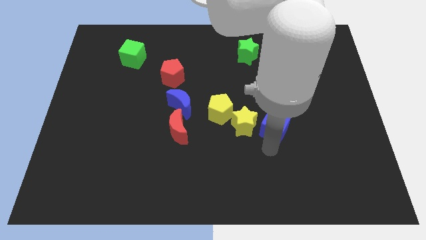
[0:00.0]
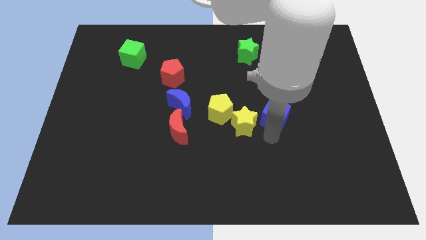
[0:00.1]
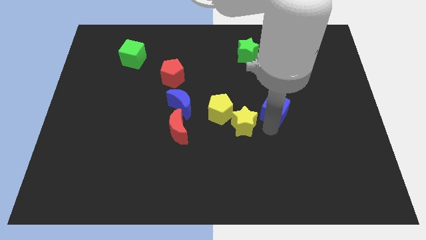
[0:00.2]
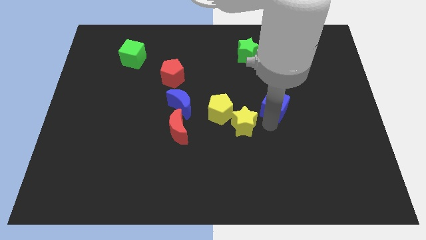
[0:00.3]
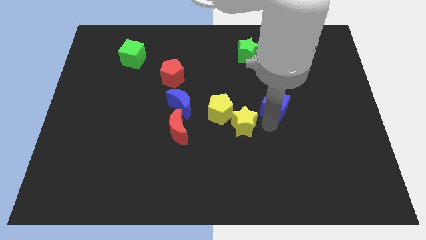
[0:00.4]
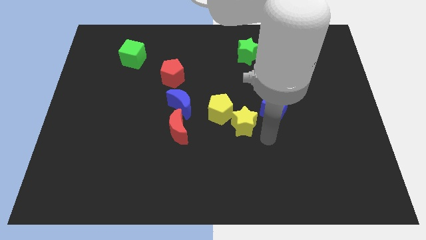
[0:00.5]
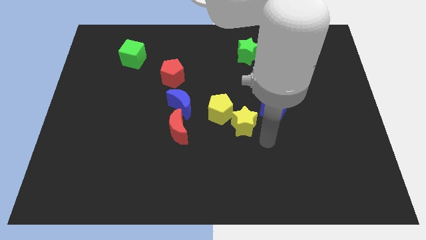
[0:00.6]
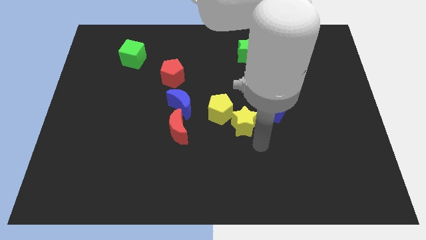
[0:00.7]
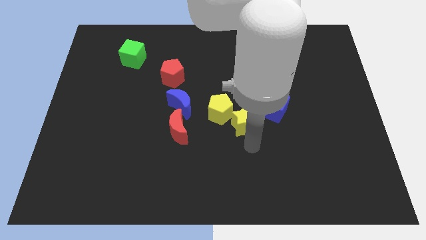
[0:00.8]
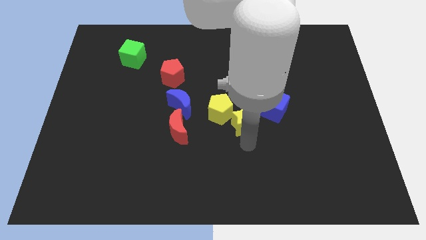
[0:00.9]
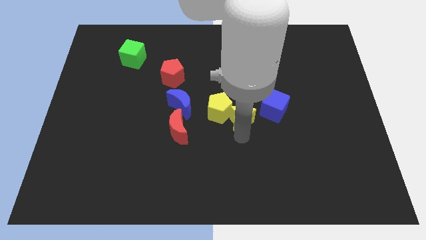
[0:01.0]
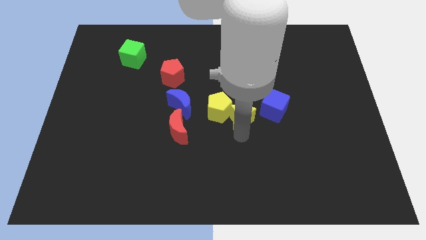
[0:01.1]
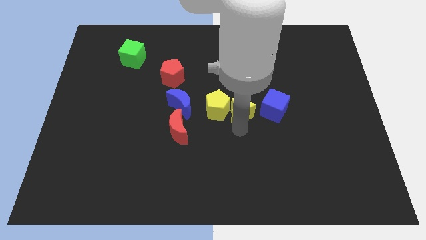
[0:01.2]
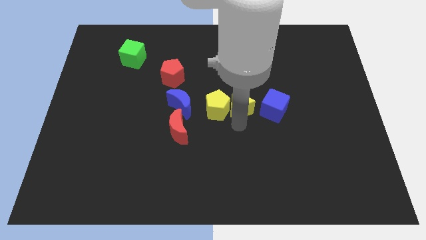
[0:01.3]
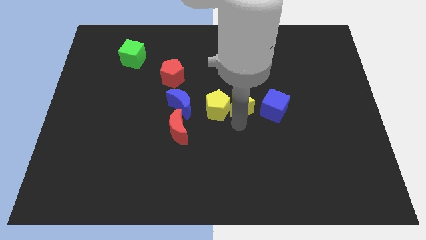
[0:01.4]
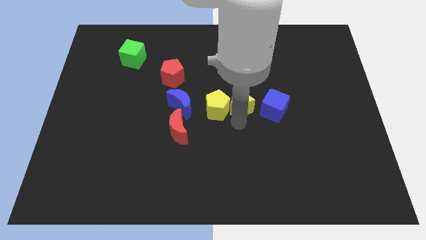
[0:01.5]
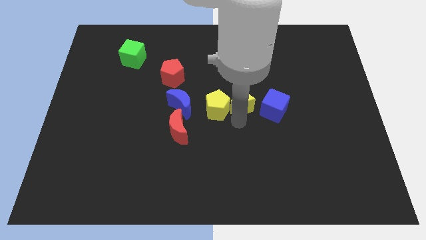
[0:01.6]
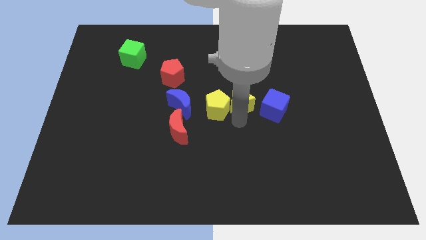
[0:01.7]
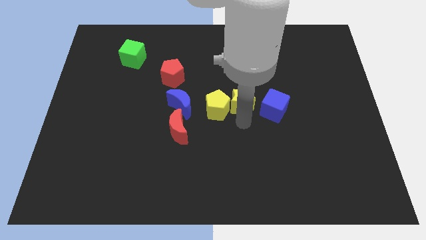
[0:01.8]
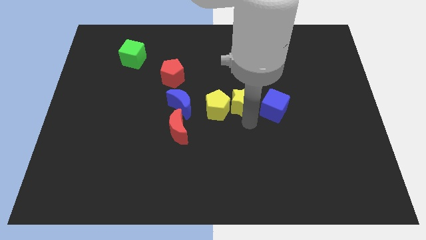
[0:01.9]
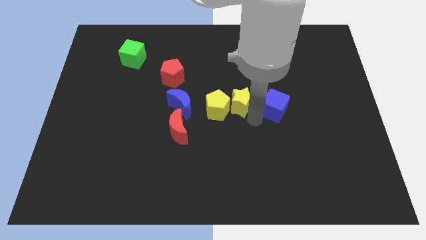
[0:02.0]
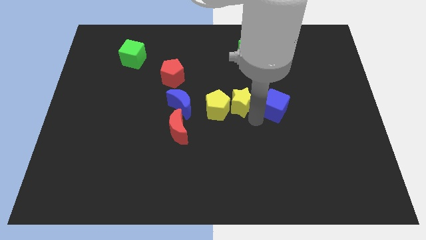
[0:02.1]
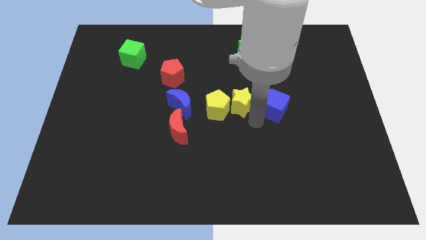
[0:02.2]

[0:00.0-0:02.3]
move the yellow star to the right of the yellow pentagon

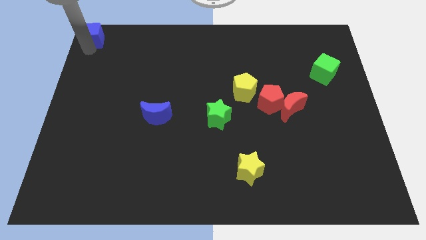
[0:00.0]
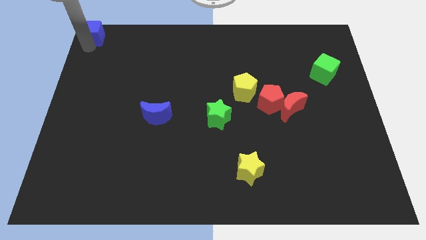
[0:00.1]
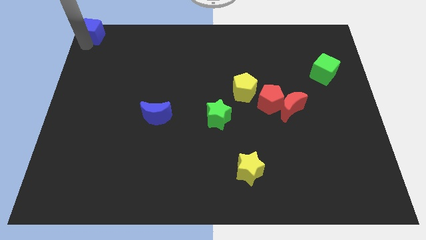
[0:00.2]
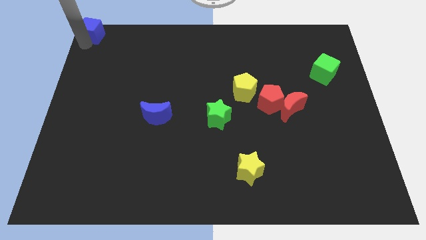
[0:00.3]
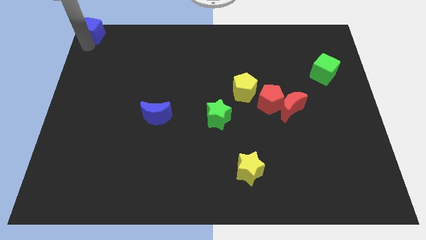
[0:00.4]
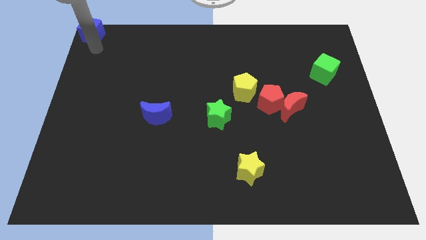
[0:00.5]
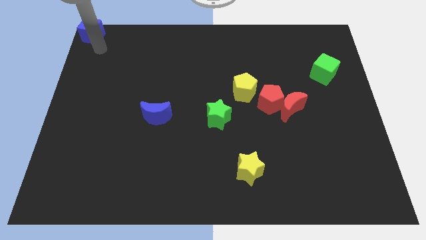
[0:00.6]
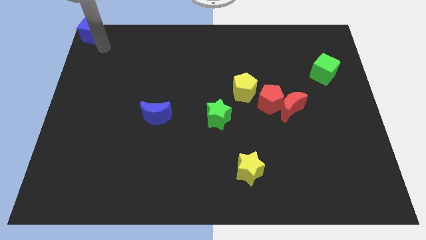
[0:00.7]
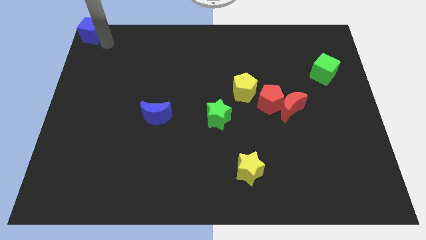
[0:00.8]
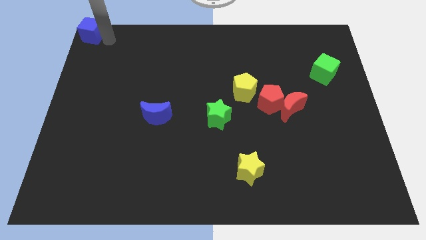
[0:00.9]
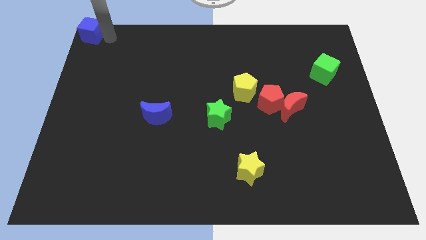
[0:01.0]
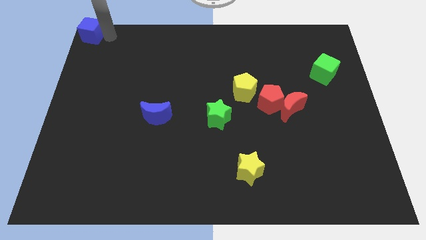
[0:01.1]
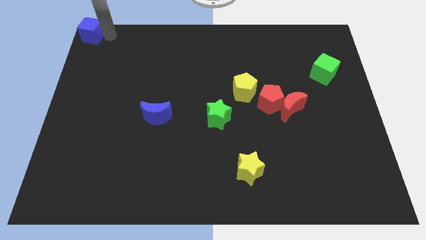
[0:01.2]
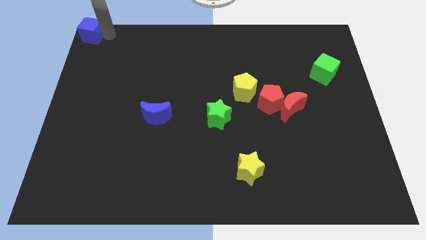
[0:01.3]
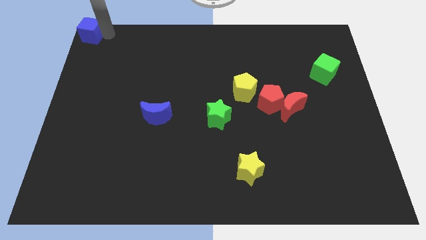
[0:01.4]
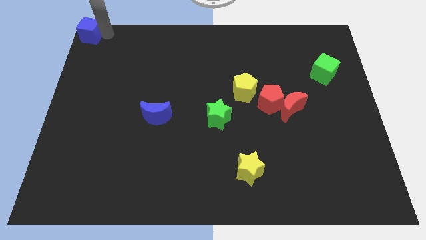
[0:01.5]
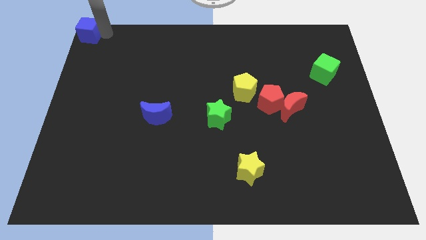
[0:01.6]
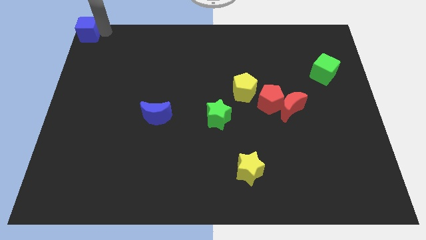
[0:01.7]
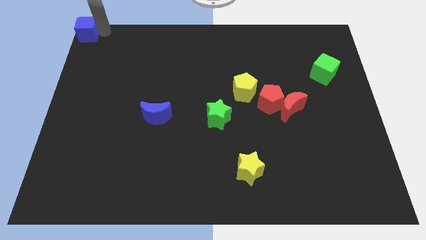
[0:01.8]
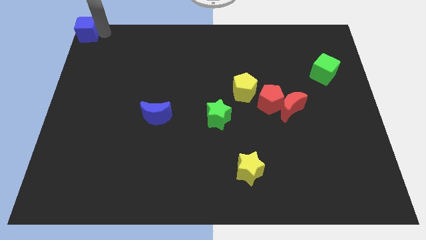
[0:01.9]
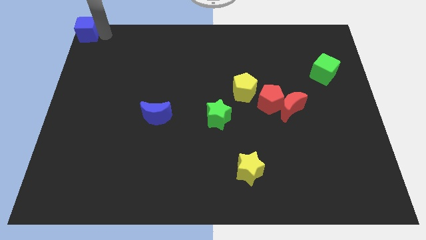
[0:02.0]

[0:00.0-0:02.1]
place the blue cube at the top left corner of the board

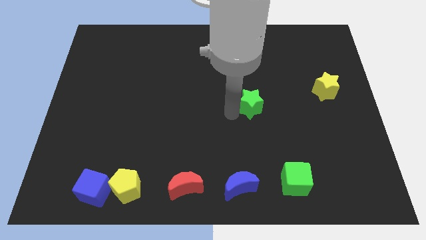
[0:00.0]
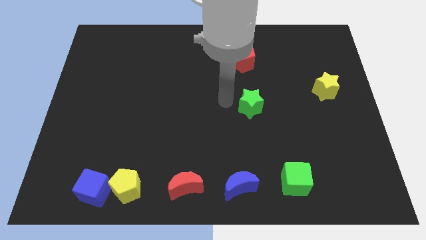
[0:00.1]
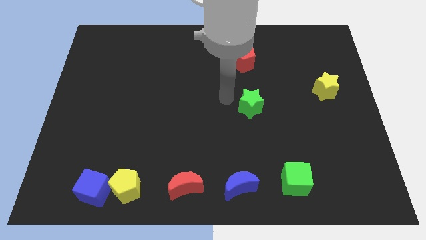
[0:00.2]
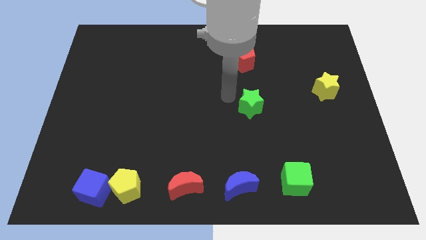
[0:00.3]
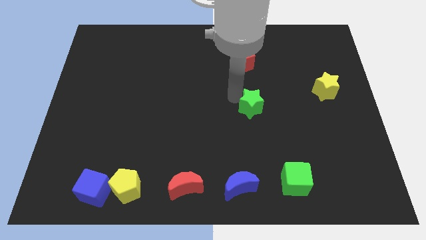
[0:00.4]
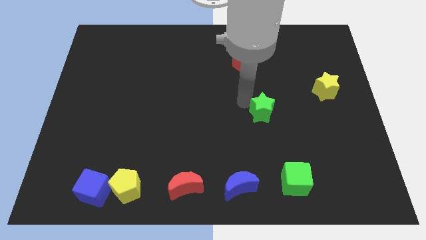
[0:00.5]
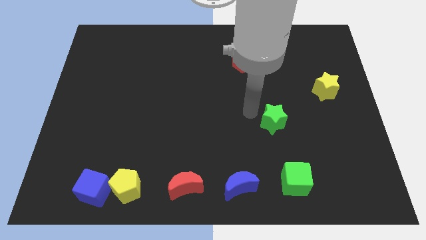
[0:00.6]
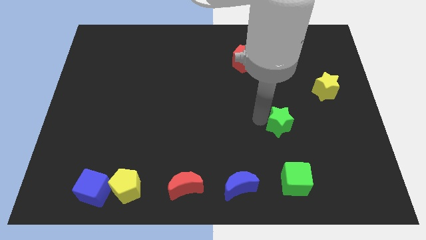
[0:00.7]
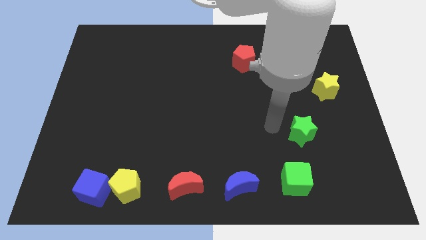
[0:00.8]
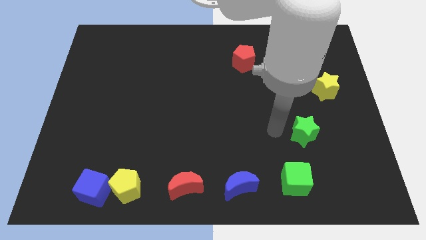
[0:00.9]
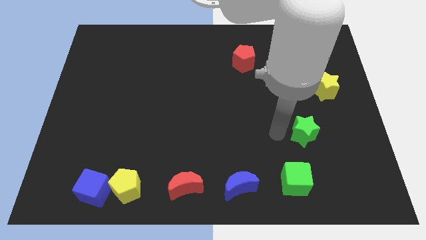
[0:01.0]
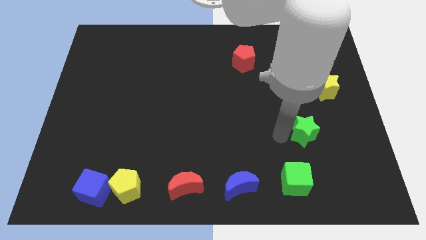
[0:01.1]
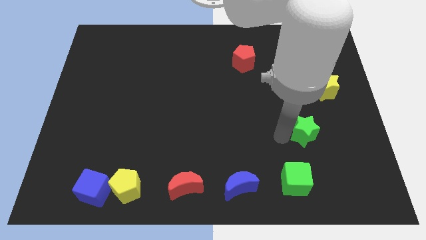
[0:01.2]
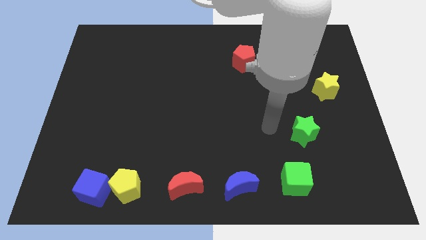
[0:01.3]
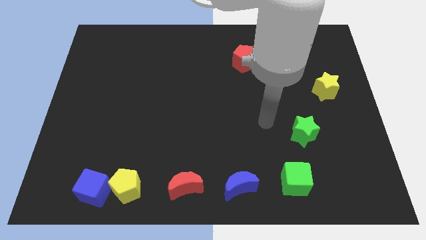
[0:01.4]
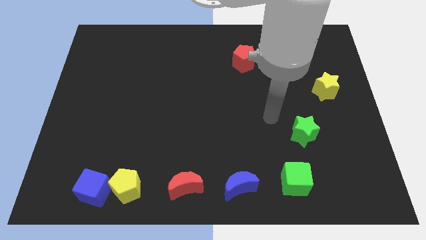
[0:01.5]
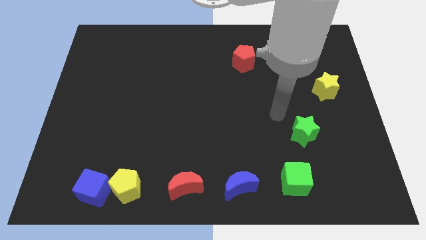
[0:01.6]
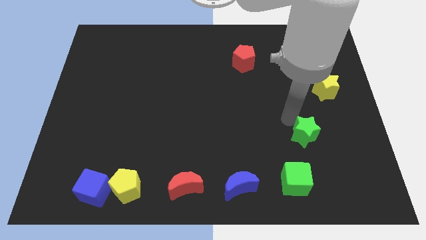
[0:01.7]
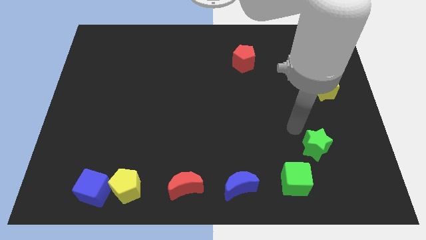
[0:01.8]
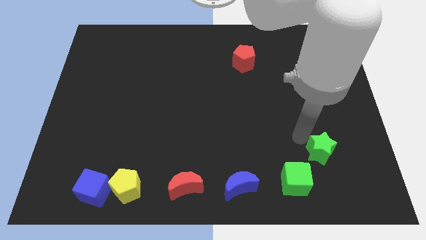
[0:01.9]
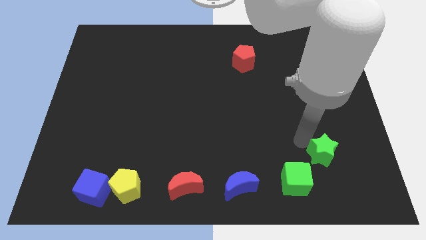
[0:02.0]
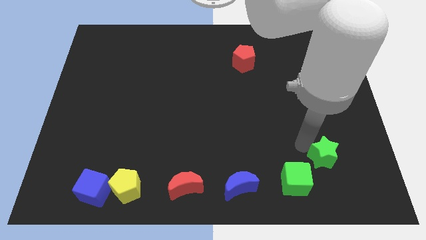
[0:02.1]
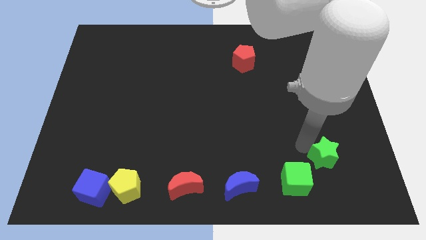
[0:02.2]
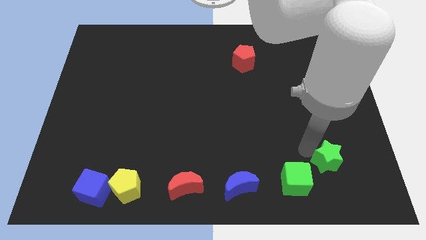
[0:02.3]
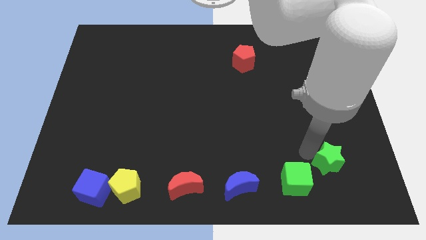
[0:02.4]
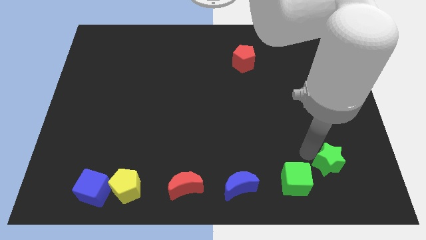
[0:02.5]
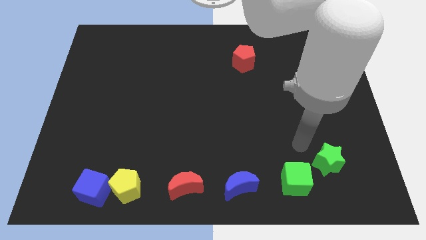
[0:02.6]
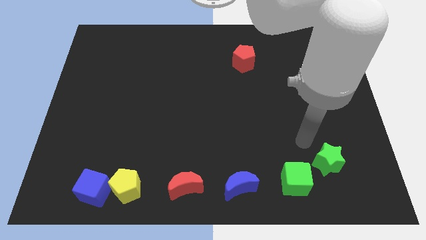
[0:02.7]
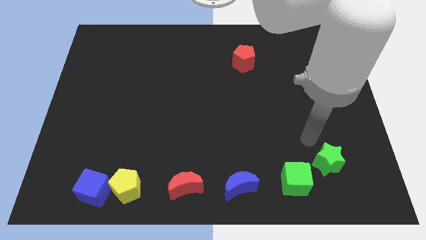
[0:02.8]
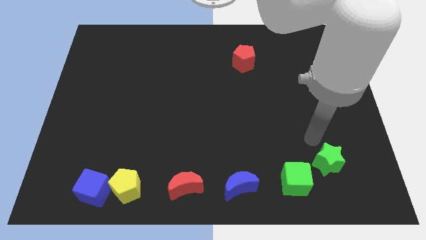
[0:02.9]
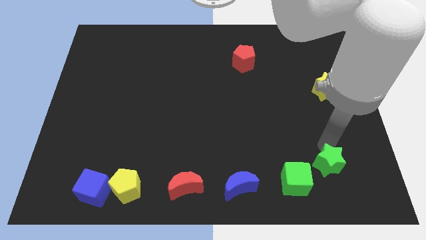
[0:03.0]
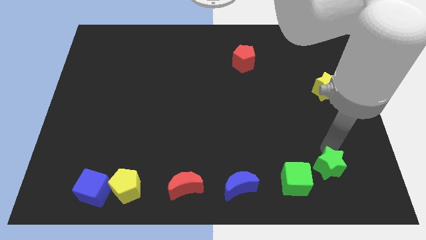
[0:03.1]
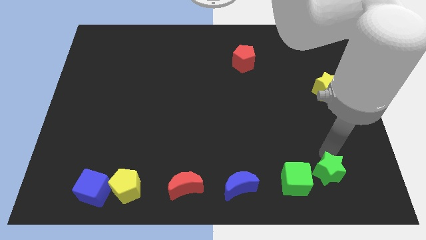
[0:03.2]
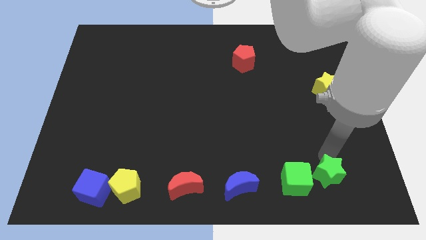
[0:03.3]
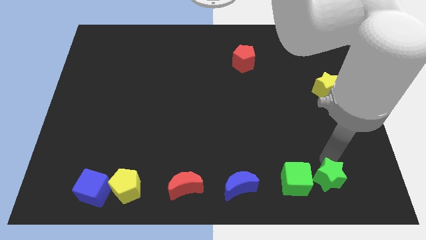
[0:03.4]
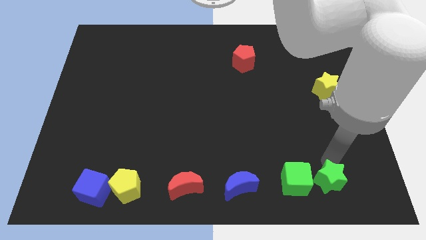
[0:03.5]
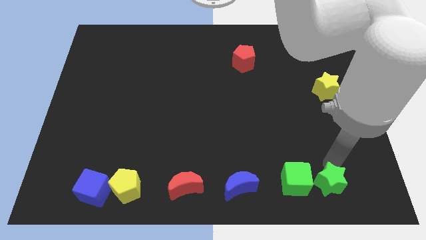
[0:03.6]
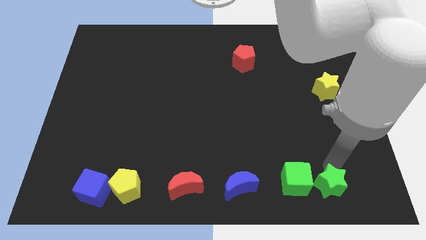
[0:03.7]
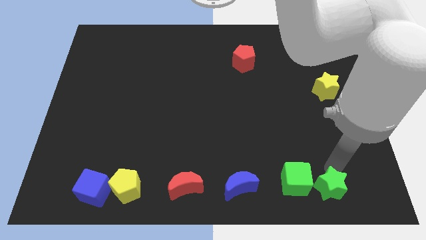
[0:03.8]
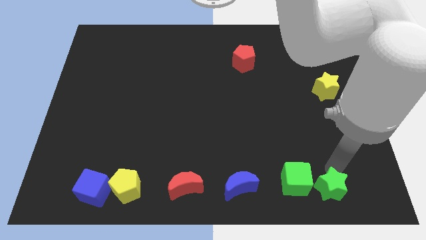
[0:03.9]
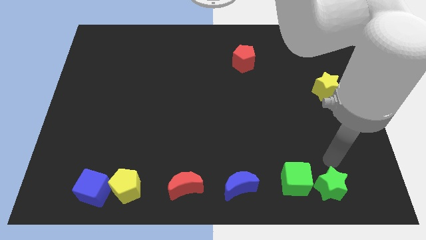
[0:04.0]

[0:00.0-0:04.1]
slide green star to the right of green cube

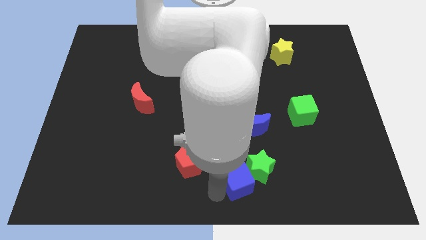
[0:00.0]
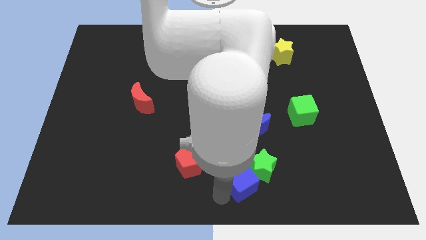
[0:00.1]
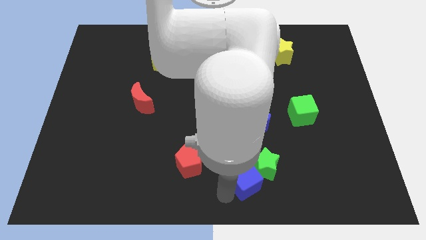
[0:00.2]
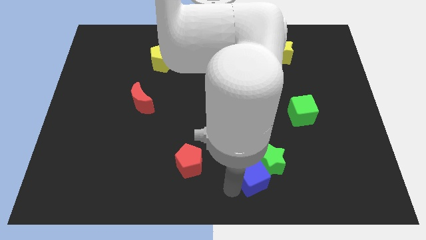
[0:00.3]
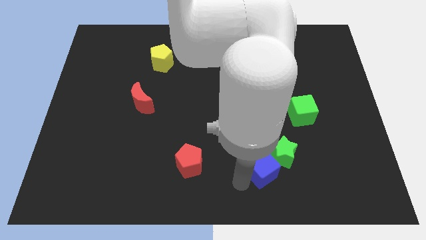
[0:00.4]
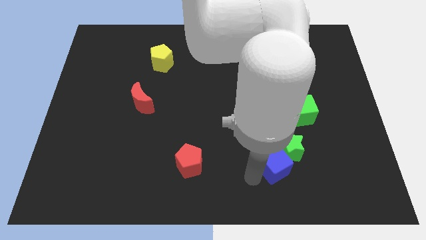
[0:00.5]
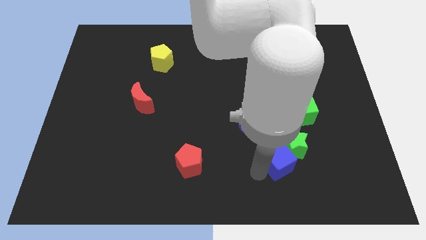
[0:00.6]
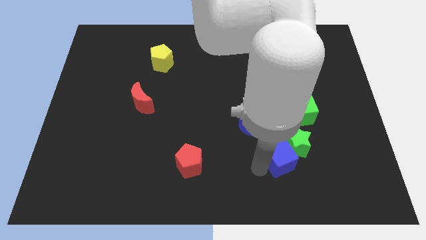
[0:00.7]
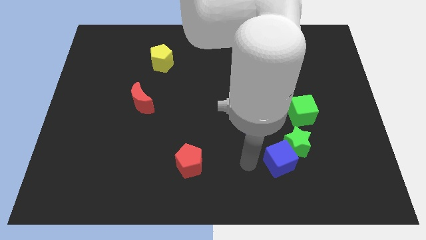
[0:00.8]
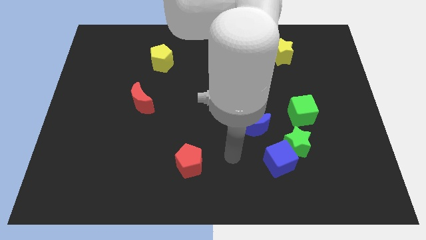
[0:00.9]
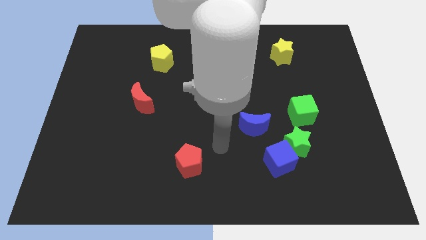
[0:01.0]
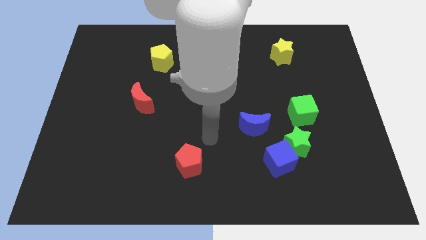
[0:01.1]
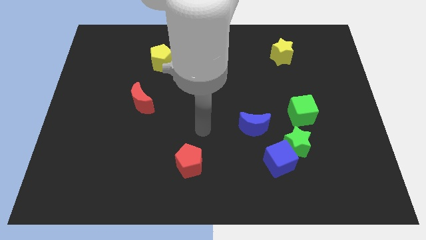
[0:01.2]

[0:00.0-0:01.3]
move the blue cube along the green star
